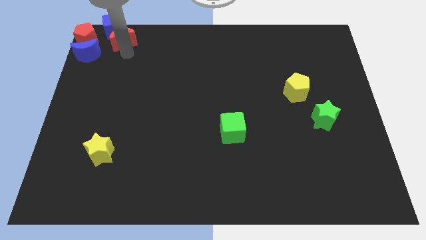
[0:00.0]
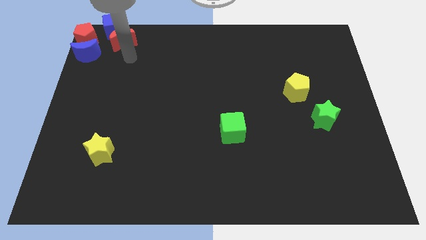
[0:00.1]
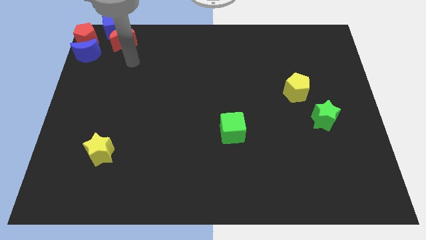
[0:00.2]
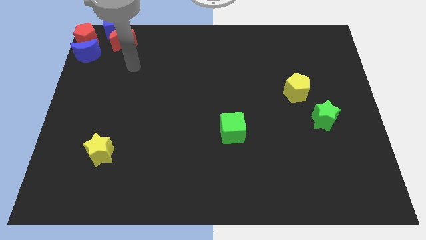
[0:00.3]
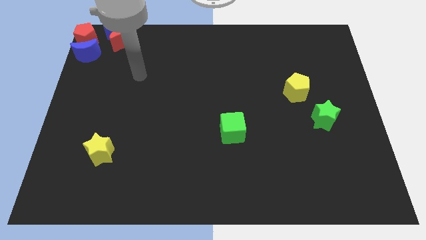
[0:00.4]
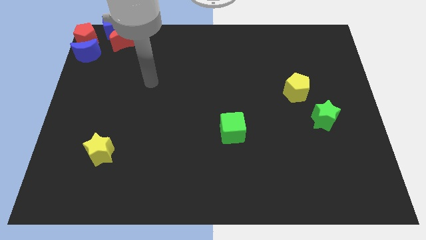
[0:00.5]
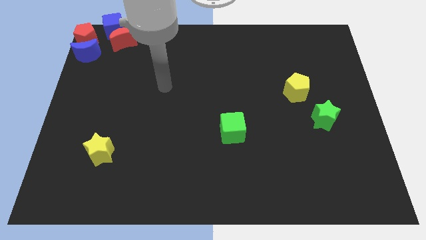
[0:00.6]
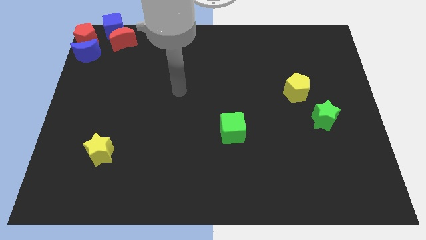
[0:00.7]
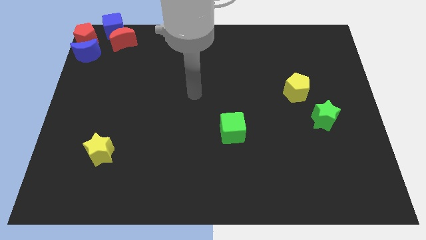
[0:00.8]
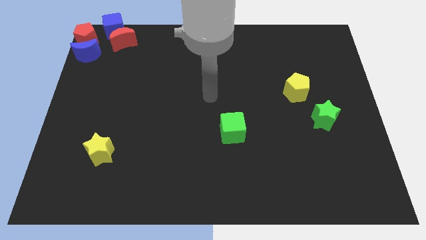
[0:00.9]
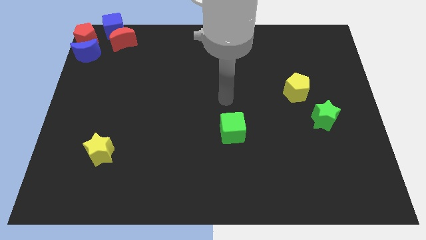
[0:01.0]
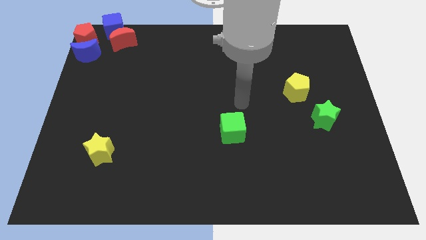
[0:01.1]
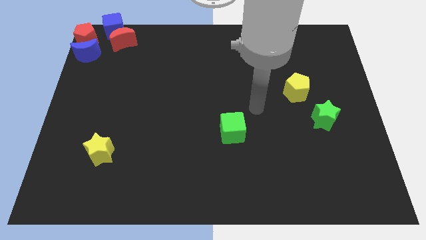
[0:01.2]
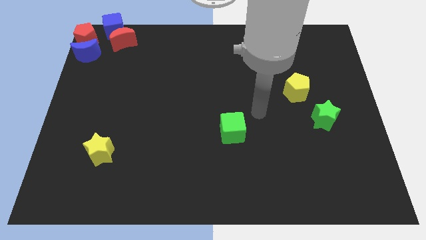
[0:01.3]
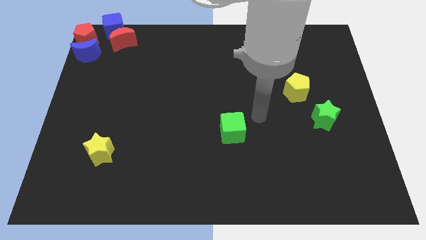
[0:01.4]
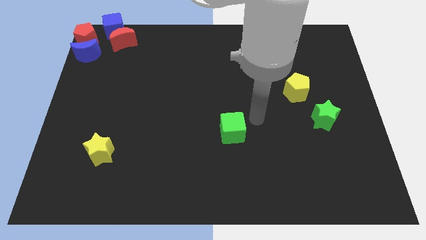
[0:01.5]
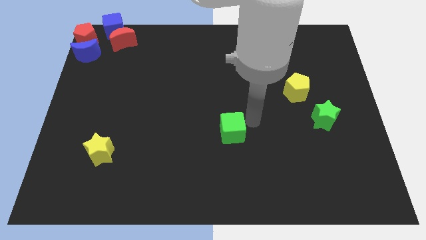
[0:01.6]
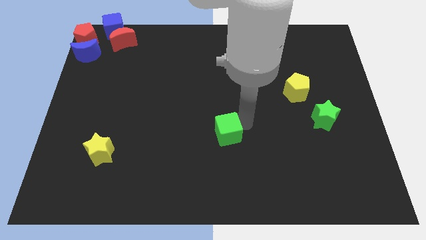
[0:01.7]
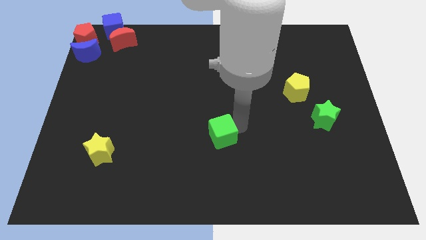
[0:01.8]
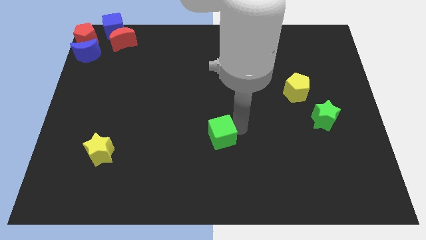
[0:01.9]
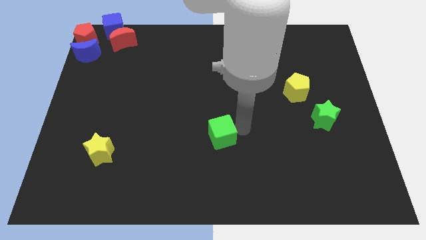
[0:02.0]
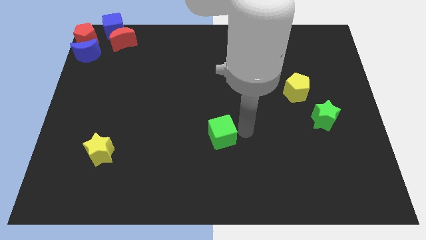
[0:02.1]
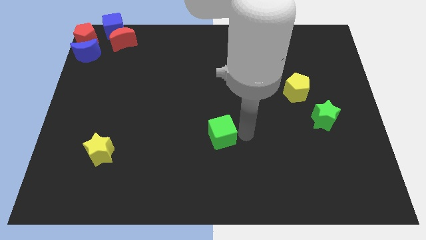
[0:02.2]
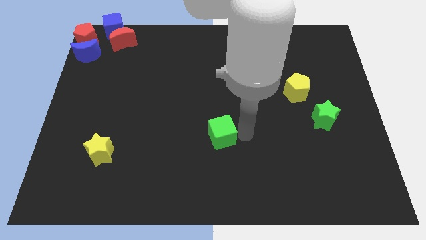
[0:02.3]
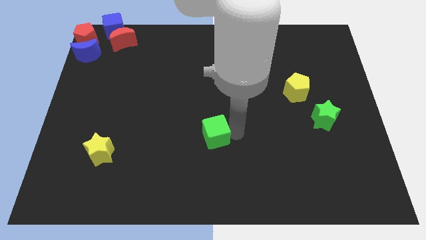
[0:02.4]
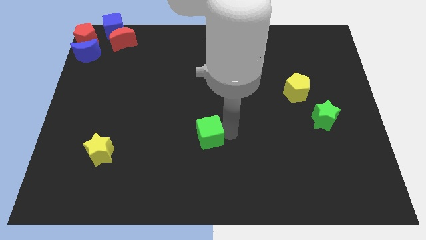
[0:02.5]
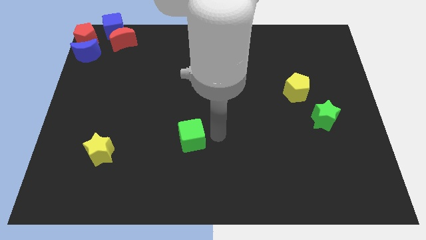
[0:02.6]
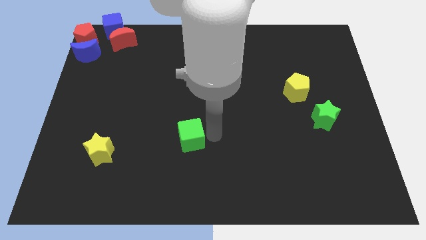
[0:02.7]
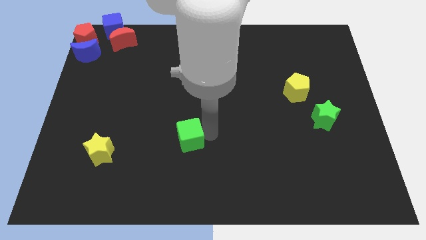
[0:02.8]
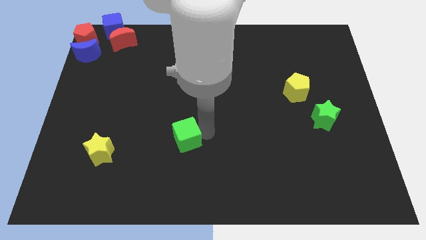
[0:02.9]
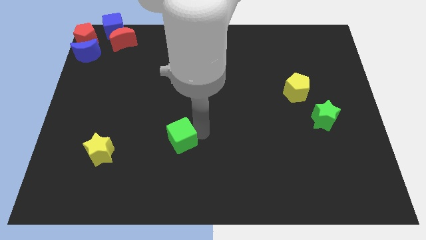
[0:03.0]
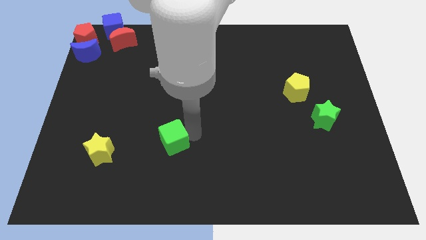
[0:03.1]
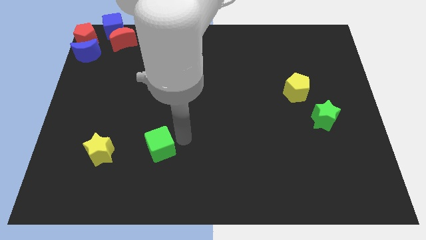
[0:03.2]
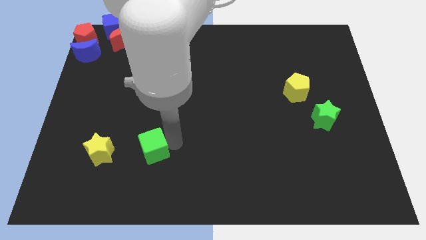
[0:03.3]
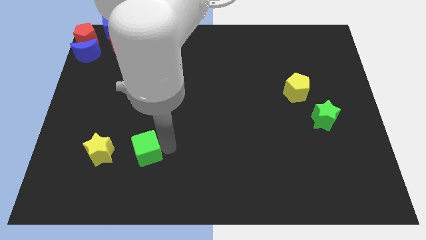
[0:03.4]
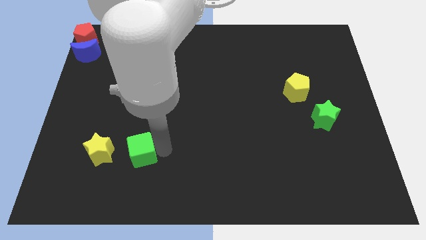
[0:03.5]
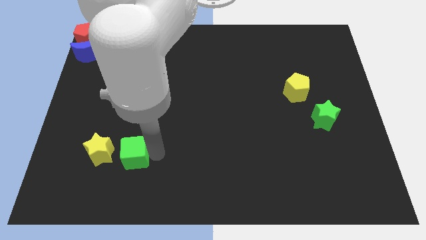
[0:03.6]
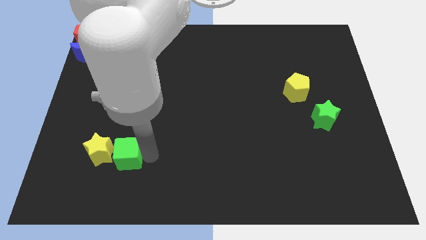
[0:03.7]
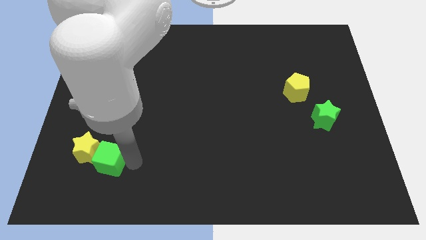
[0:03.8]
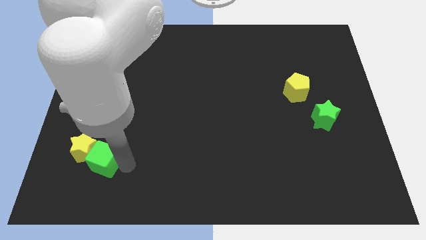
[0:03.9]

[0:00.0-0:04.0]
slide the green cube into the right side of the yellow star

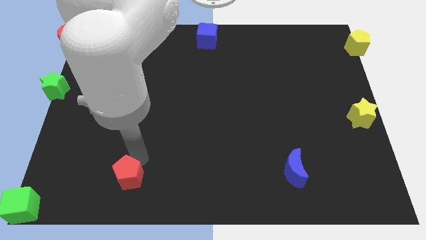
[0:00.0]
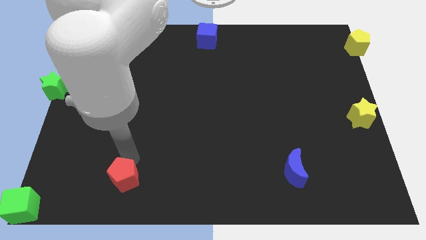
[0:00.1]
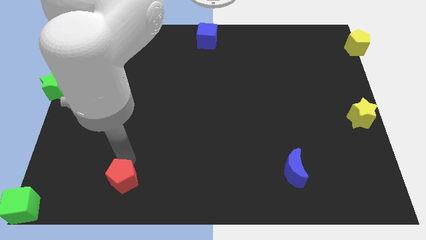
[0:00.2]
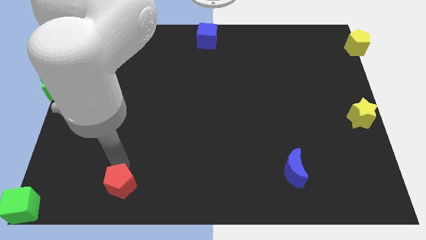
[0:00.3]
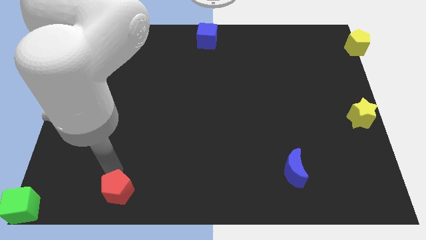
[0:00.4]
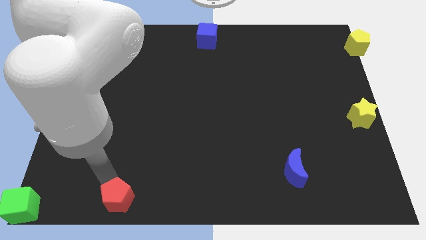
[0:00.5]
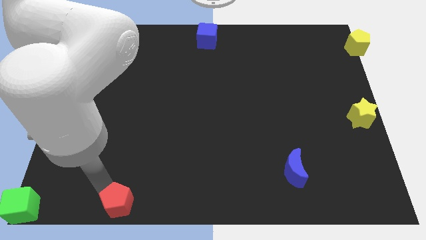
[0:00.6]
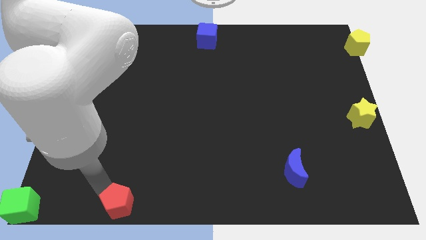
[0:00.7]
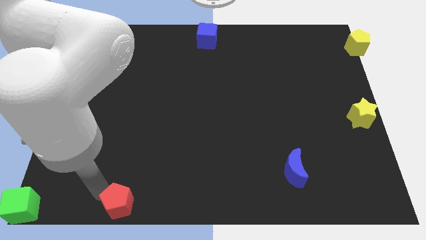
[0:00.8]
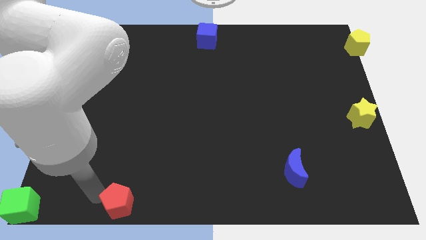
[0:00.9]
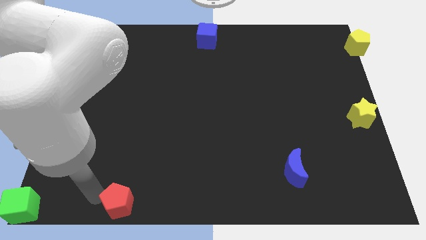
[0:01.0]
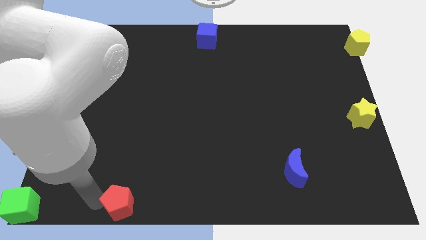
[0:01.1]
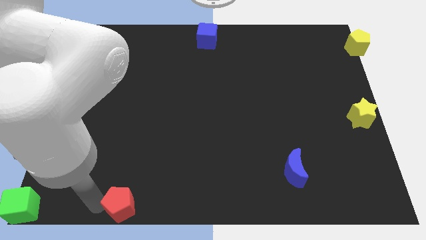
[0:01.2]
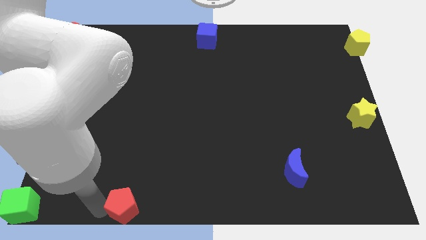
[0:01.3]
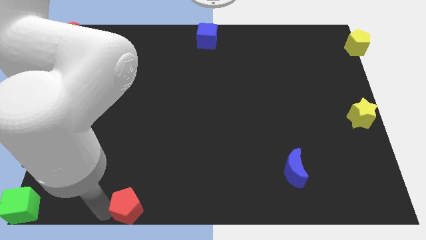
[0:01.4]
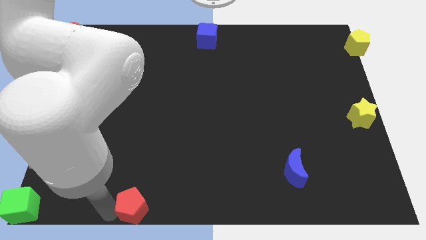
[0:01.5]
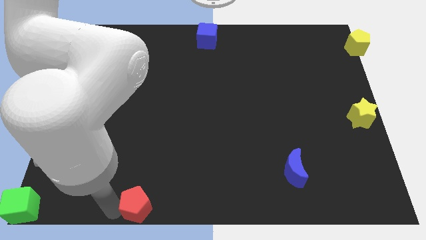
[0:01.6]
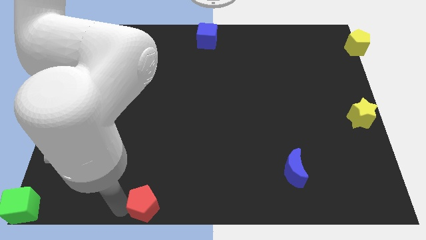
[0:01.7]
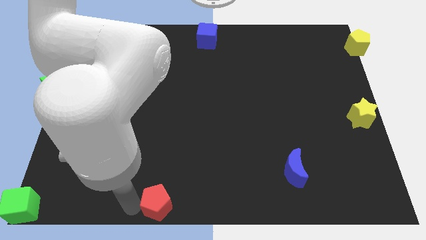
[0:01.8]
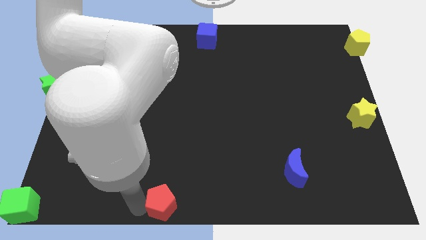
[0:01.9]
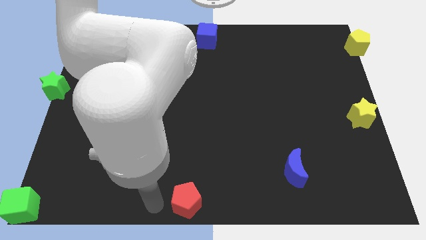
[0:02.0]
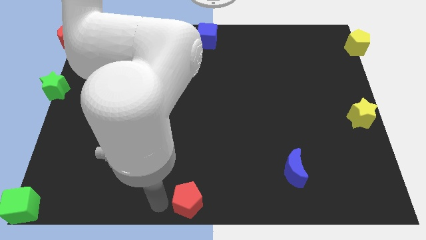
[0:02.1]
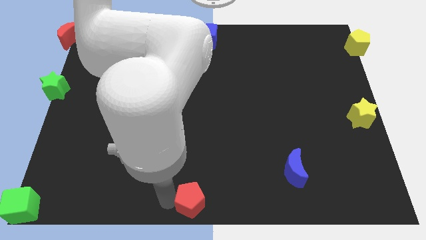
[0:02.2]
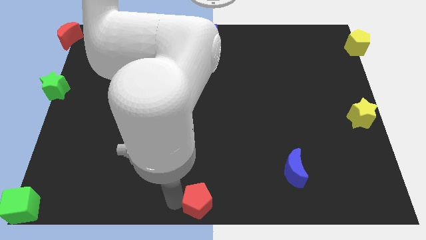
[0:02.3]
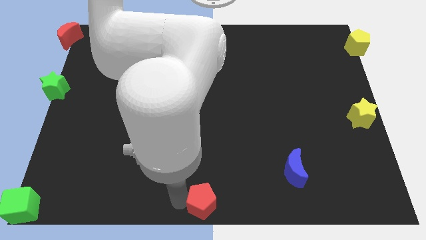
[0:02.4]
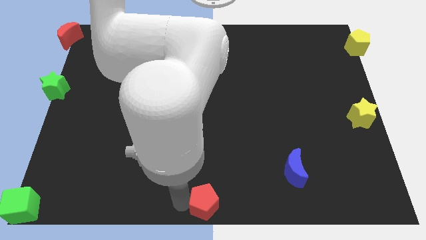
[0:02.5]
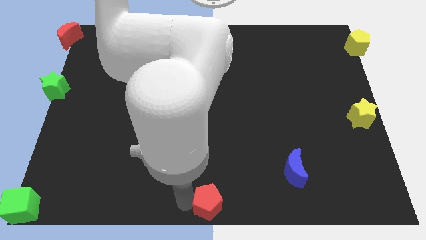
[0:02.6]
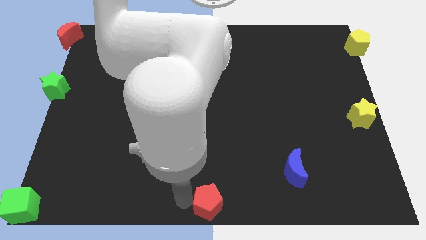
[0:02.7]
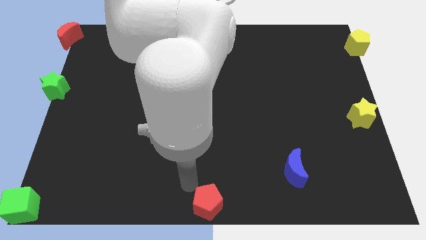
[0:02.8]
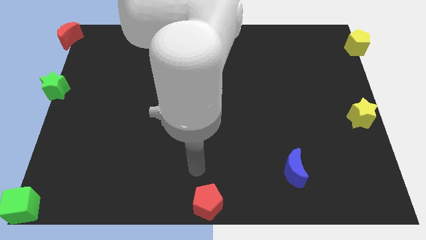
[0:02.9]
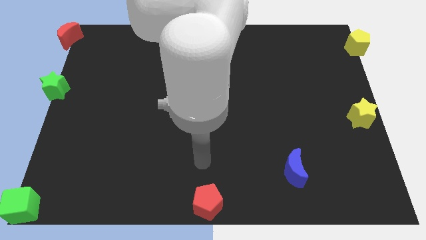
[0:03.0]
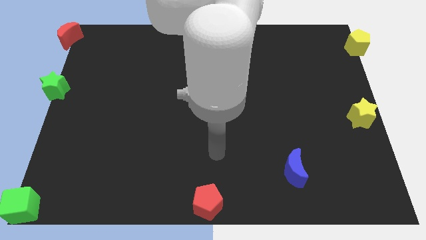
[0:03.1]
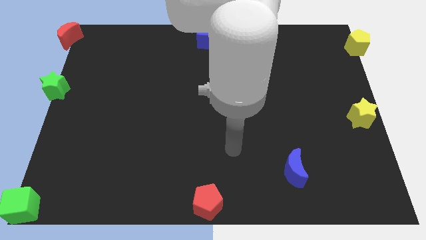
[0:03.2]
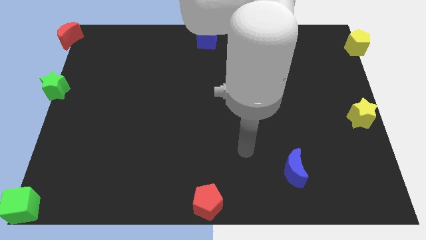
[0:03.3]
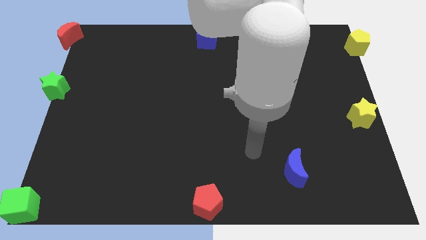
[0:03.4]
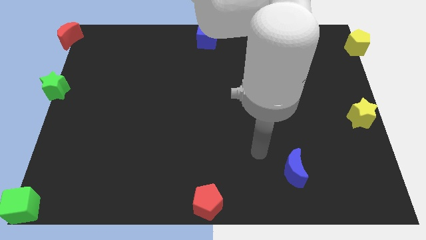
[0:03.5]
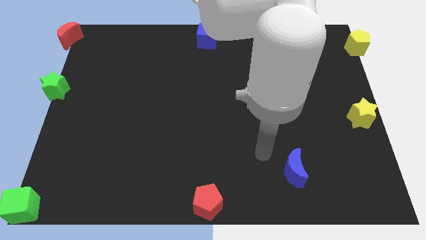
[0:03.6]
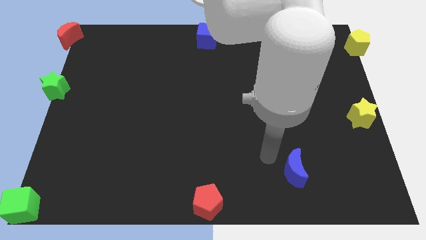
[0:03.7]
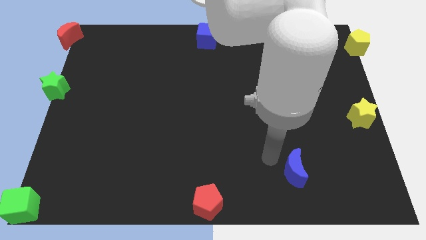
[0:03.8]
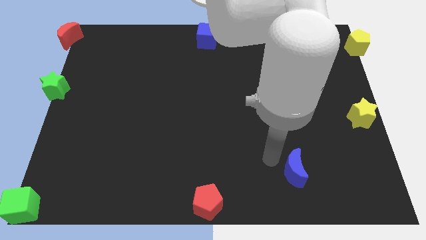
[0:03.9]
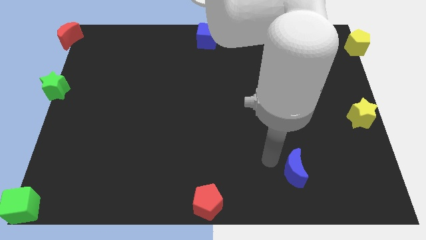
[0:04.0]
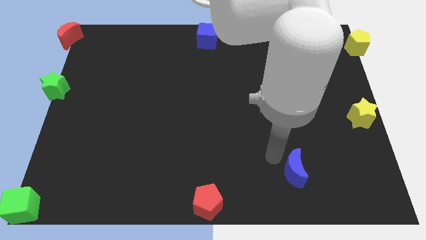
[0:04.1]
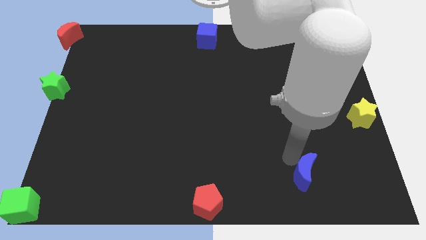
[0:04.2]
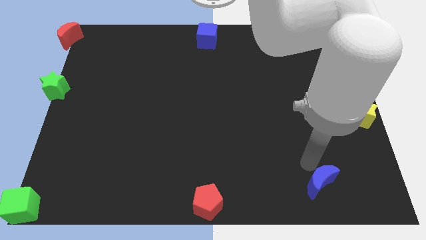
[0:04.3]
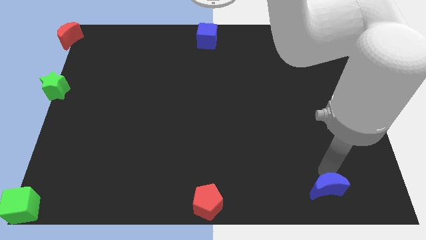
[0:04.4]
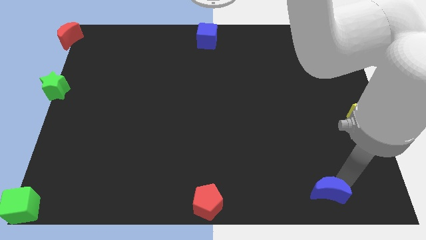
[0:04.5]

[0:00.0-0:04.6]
move the blue moon towards the bottom right corner
